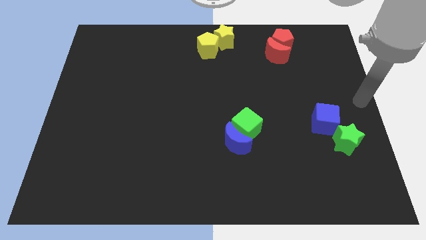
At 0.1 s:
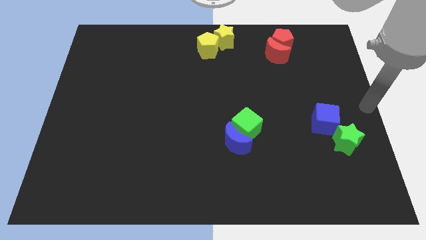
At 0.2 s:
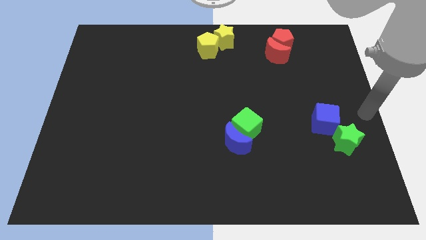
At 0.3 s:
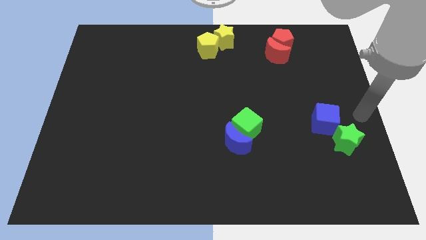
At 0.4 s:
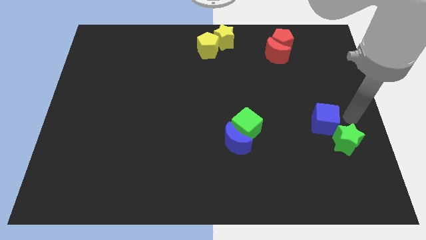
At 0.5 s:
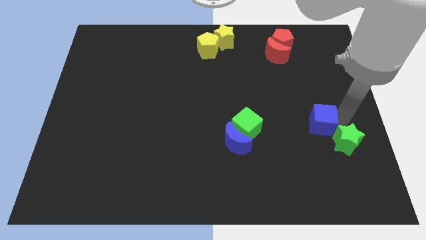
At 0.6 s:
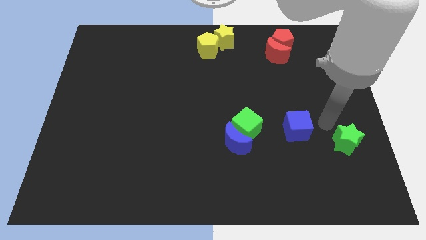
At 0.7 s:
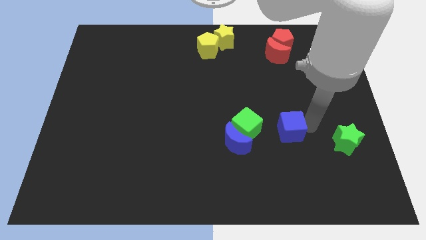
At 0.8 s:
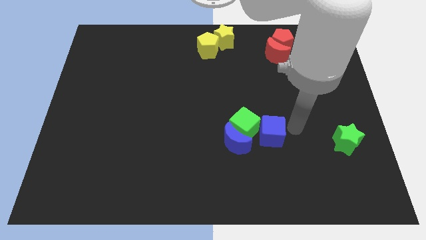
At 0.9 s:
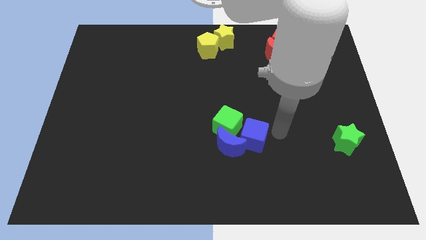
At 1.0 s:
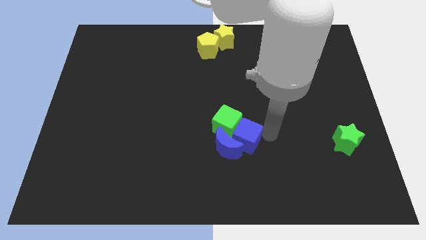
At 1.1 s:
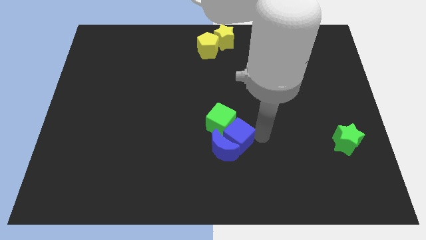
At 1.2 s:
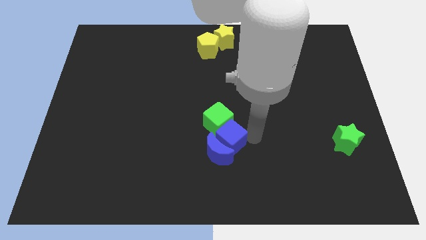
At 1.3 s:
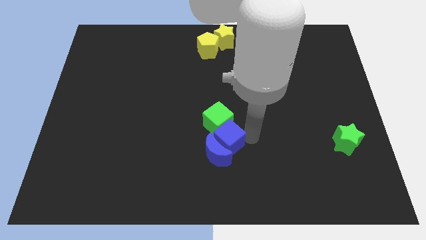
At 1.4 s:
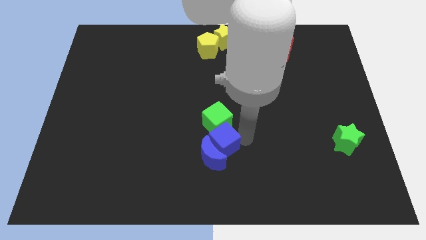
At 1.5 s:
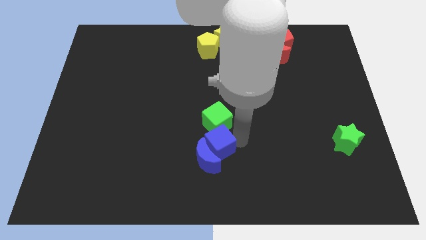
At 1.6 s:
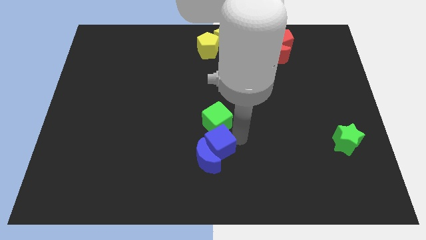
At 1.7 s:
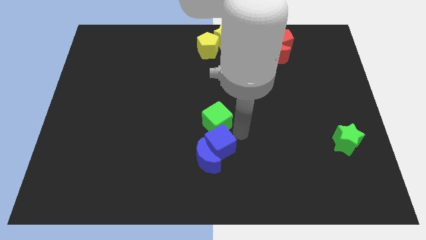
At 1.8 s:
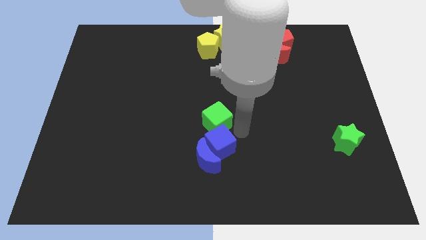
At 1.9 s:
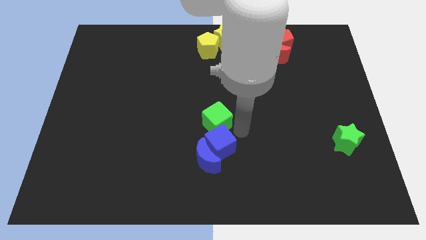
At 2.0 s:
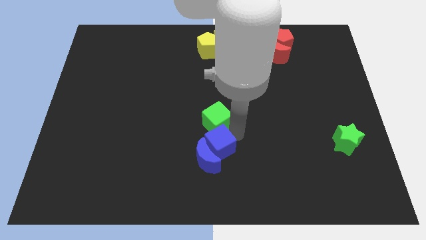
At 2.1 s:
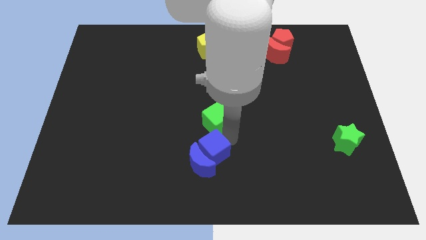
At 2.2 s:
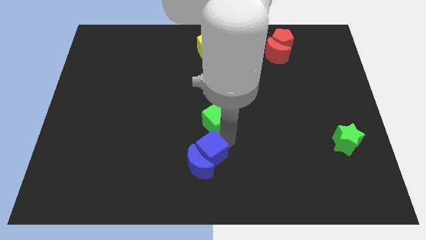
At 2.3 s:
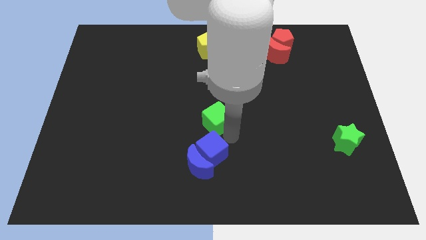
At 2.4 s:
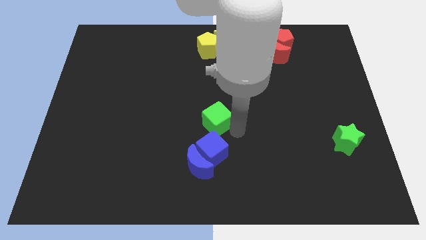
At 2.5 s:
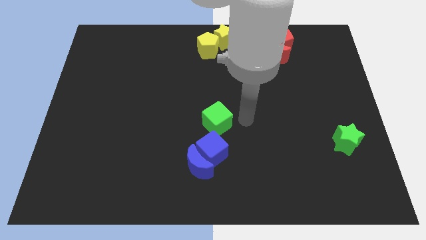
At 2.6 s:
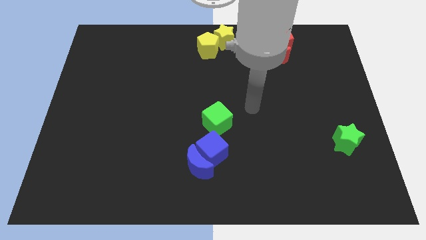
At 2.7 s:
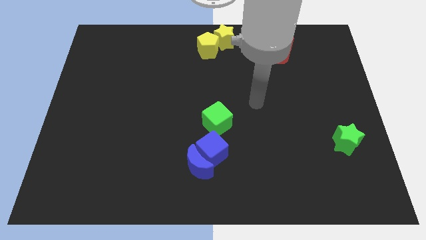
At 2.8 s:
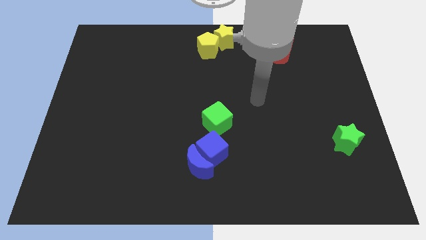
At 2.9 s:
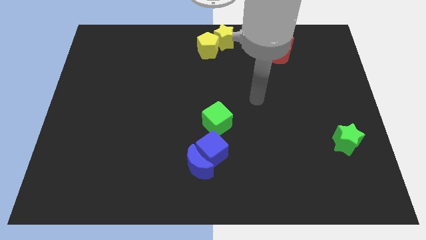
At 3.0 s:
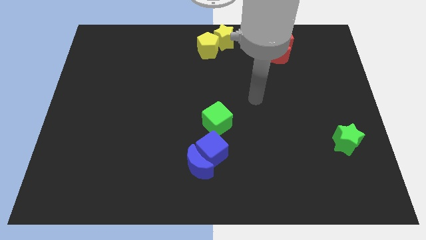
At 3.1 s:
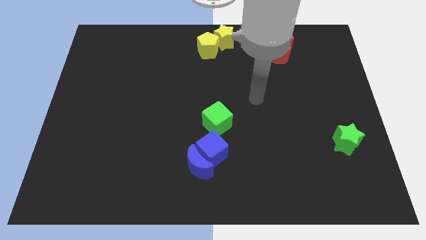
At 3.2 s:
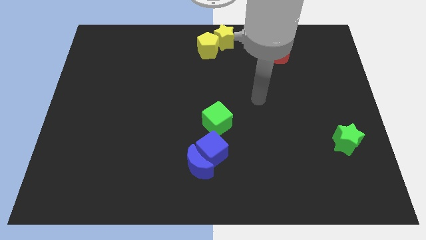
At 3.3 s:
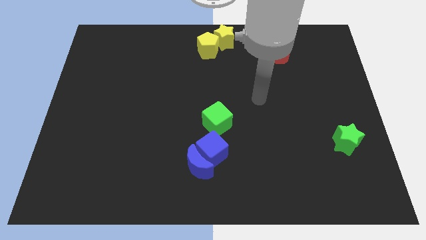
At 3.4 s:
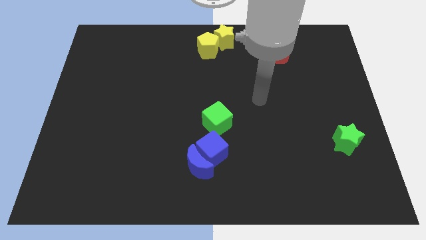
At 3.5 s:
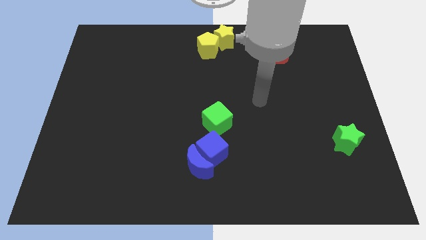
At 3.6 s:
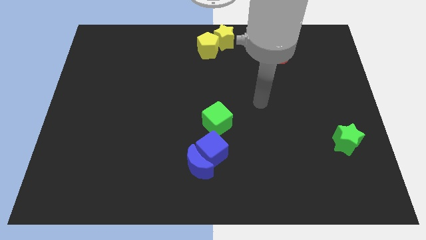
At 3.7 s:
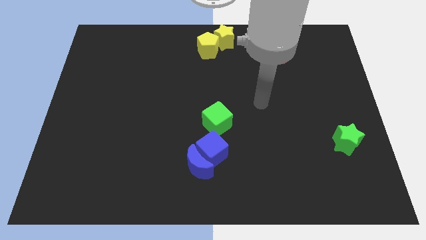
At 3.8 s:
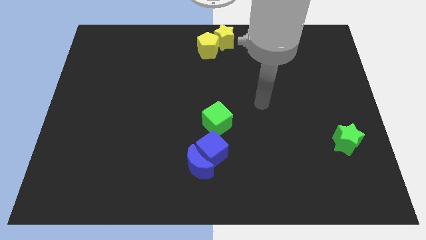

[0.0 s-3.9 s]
move the blue cube into the blue crescent

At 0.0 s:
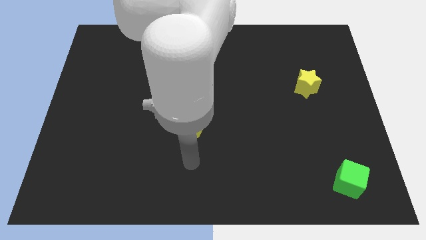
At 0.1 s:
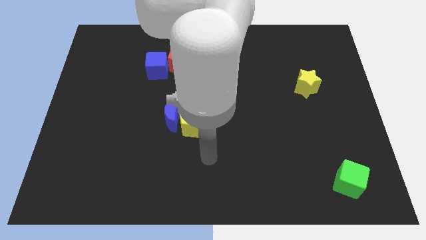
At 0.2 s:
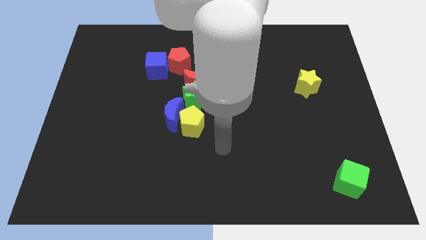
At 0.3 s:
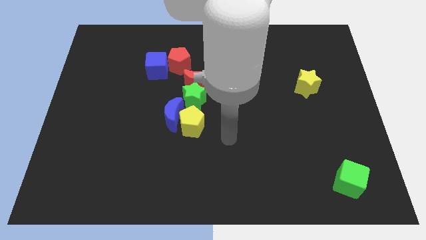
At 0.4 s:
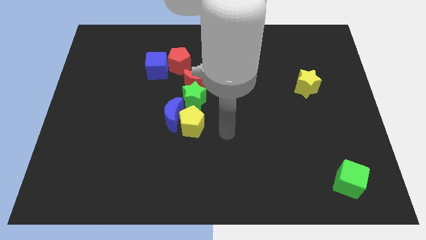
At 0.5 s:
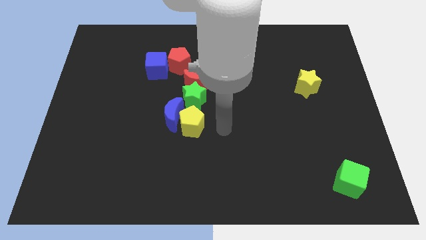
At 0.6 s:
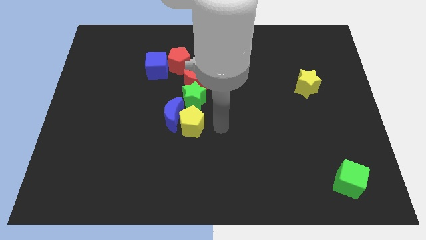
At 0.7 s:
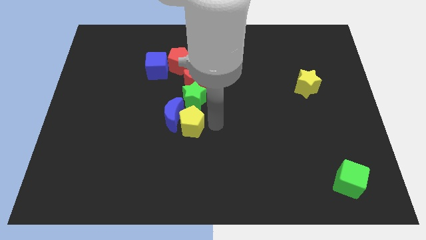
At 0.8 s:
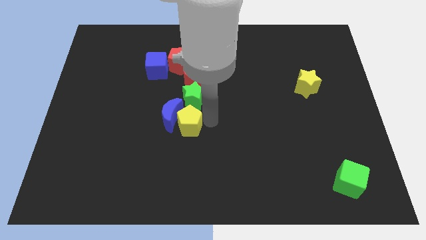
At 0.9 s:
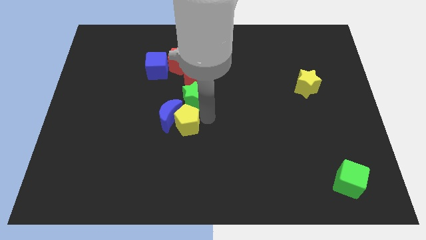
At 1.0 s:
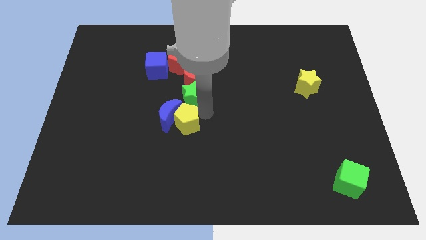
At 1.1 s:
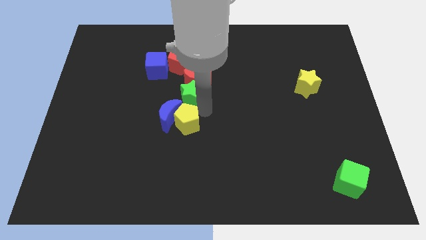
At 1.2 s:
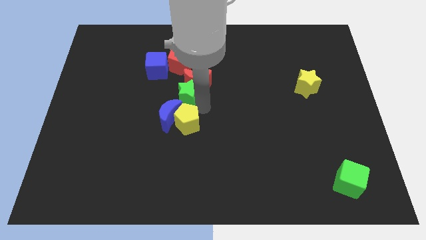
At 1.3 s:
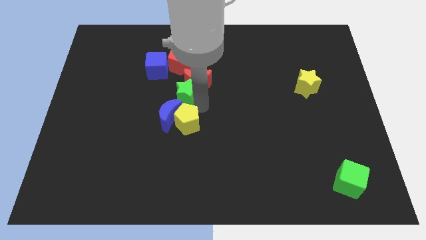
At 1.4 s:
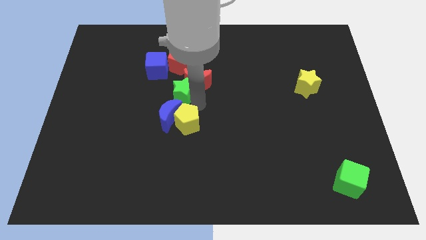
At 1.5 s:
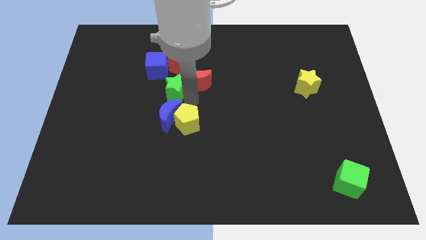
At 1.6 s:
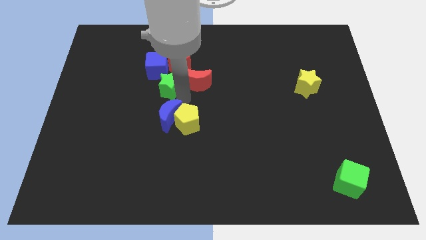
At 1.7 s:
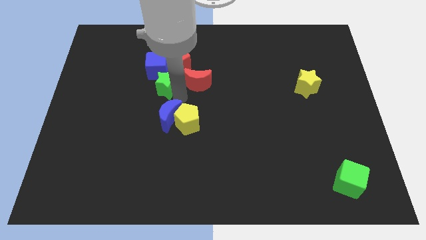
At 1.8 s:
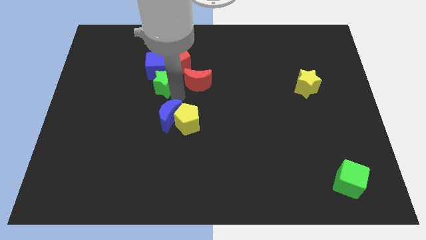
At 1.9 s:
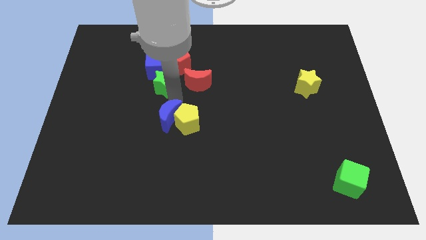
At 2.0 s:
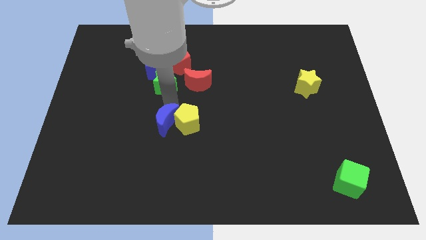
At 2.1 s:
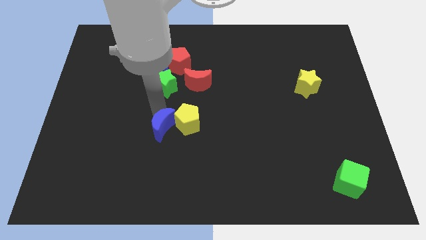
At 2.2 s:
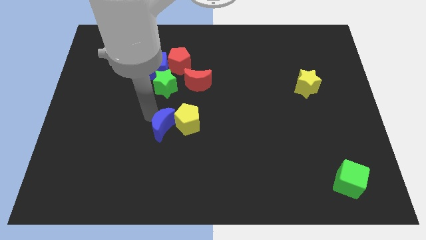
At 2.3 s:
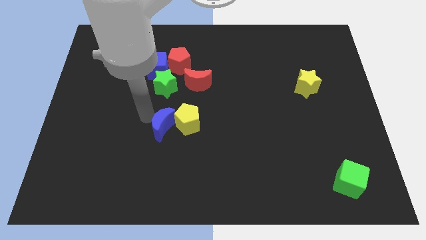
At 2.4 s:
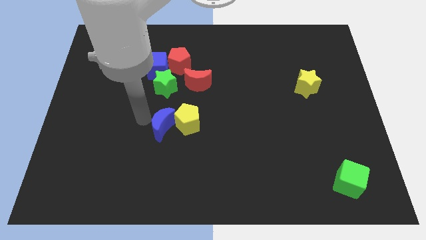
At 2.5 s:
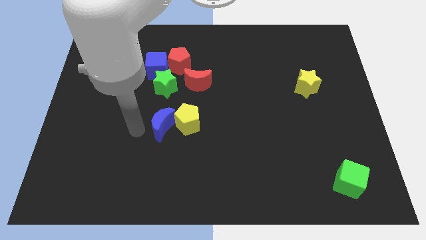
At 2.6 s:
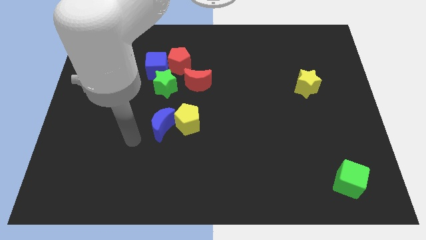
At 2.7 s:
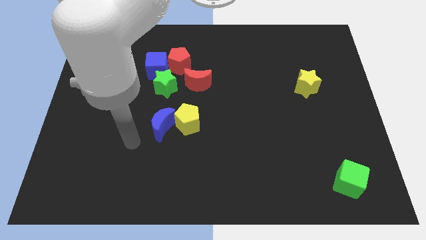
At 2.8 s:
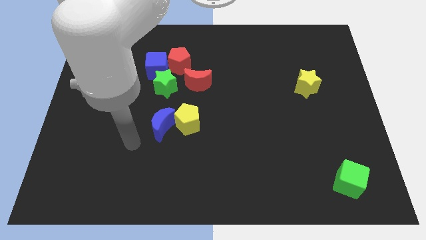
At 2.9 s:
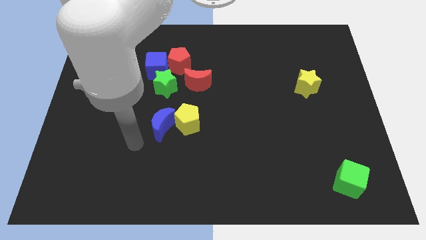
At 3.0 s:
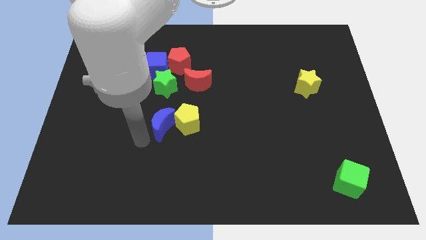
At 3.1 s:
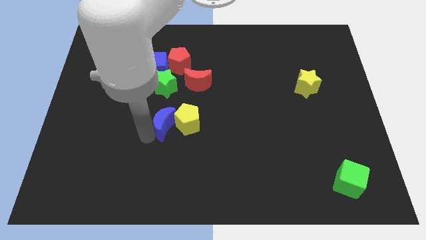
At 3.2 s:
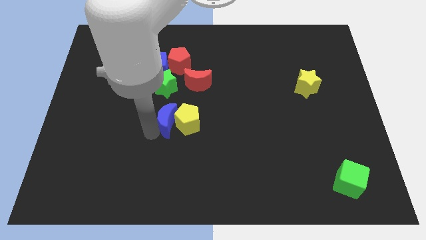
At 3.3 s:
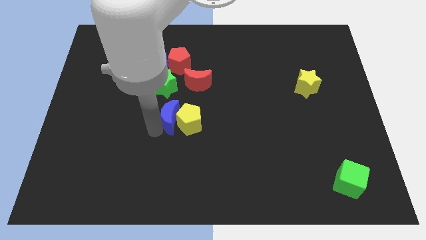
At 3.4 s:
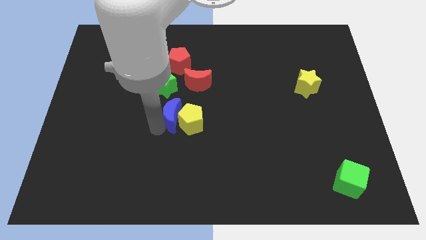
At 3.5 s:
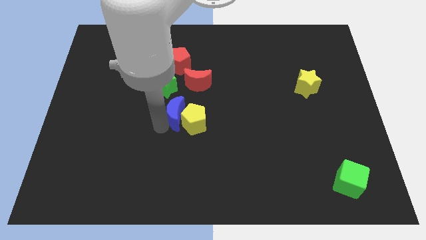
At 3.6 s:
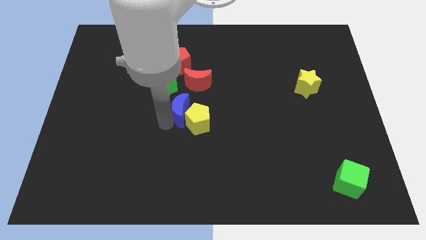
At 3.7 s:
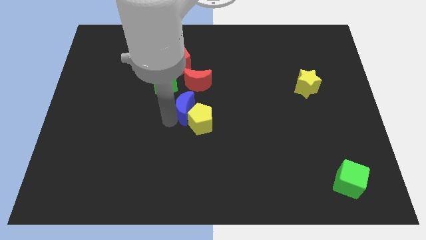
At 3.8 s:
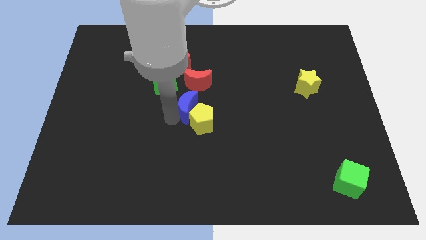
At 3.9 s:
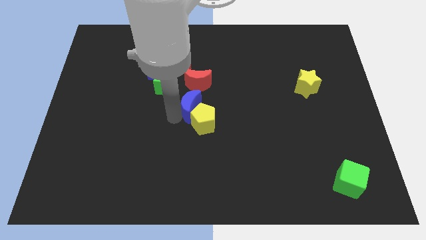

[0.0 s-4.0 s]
arrange the group of blocks properly in a line

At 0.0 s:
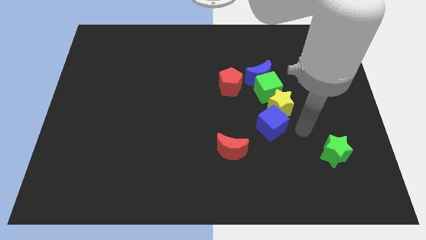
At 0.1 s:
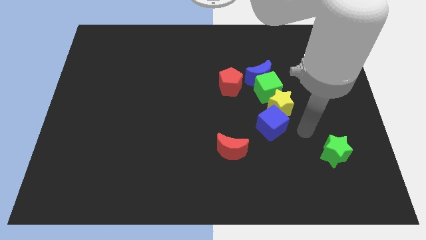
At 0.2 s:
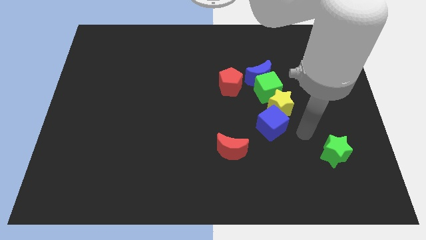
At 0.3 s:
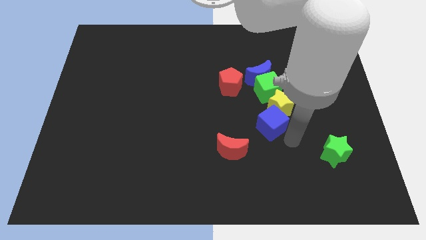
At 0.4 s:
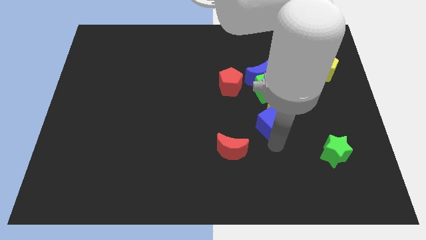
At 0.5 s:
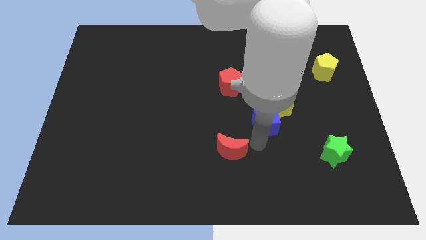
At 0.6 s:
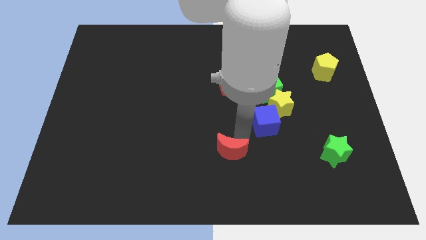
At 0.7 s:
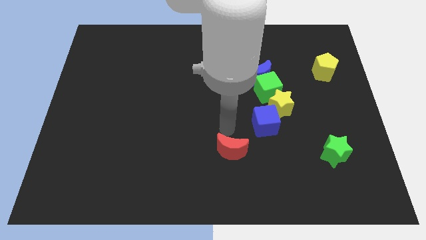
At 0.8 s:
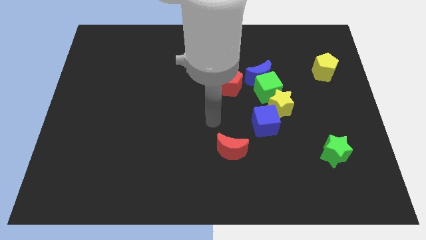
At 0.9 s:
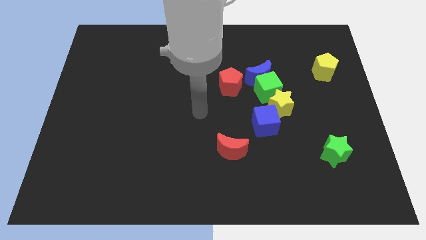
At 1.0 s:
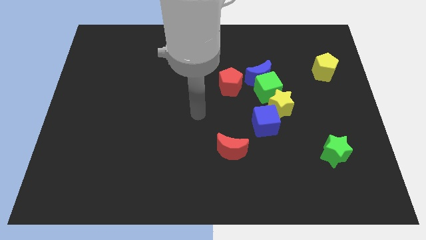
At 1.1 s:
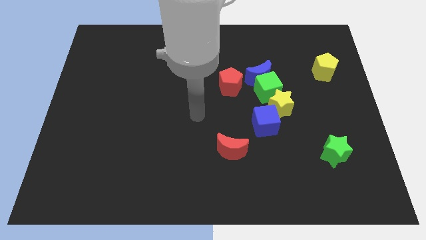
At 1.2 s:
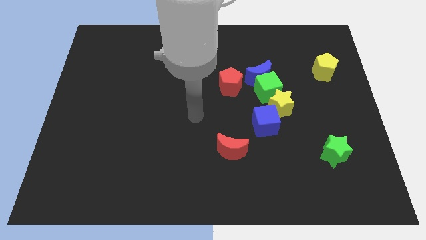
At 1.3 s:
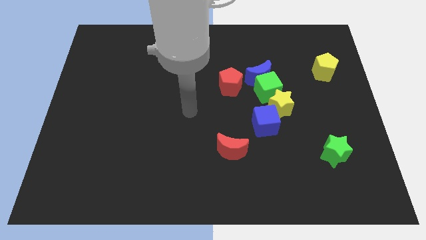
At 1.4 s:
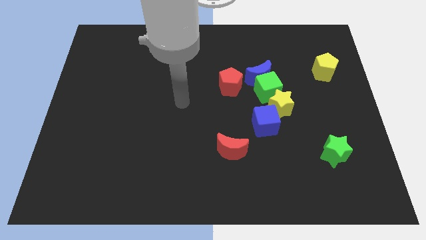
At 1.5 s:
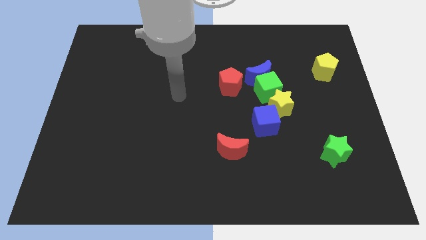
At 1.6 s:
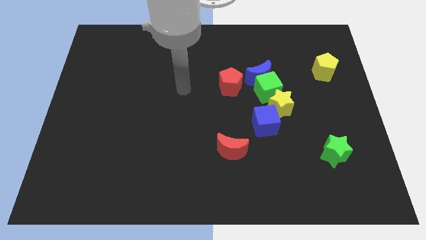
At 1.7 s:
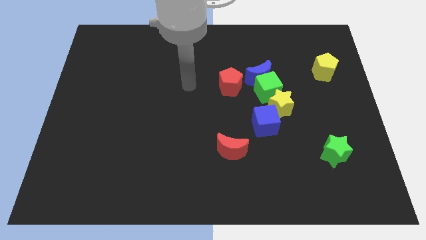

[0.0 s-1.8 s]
place your hand at the left side of the red pentagon
